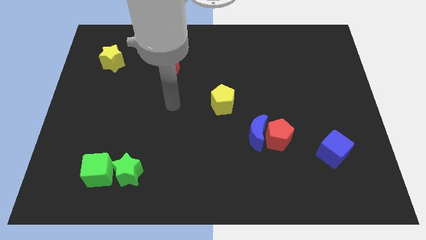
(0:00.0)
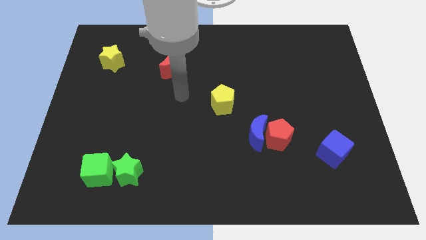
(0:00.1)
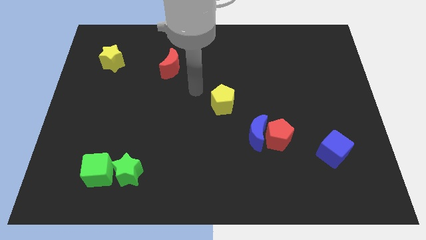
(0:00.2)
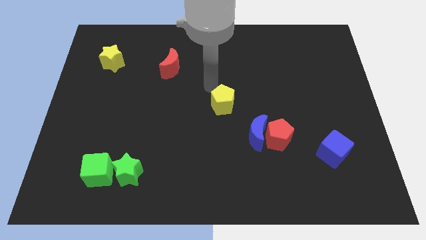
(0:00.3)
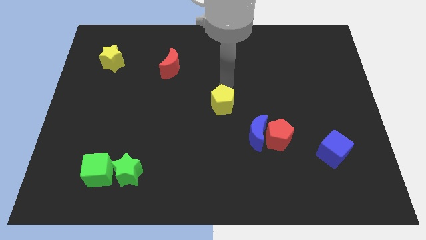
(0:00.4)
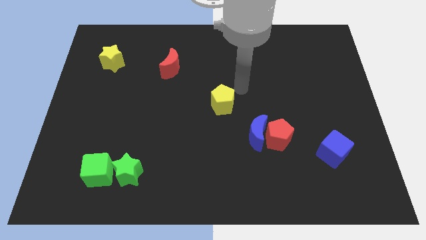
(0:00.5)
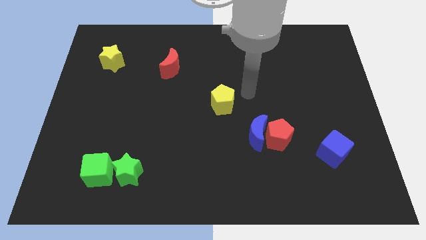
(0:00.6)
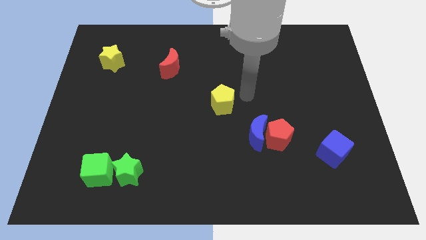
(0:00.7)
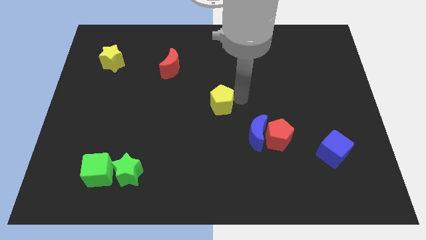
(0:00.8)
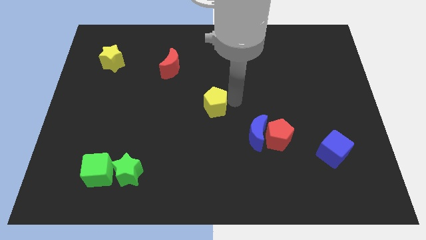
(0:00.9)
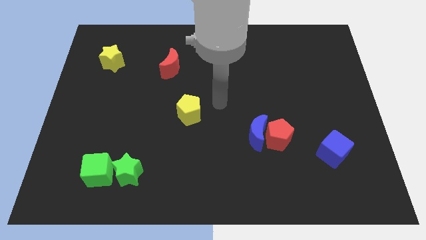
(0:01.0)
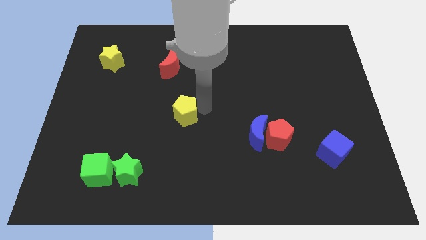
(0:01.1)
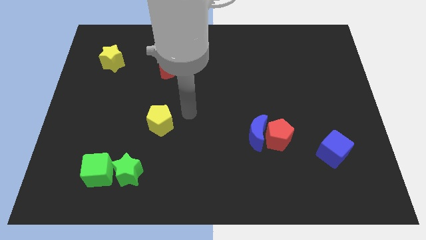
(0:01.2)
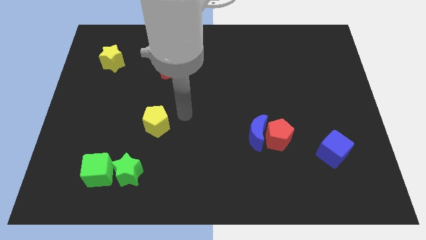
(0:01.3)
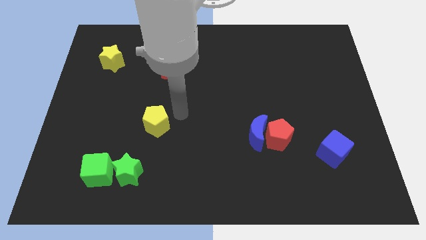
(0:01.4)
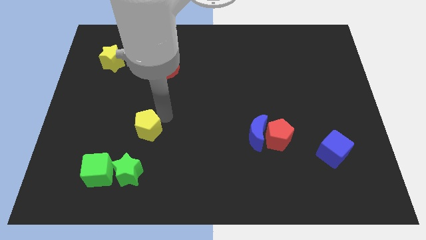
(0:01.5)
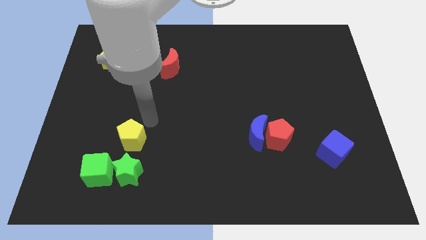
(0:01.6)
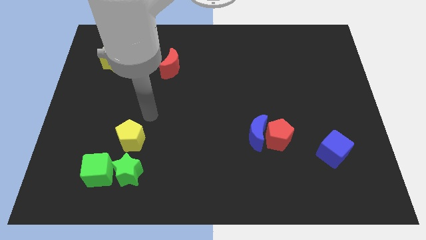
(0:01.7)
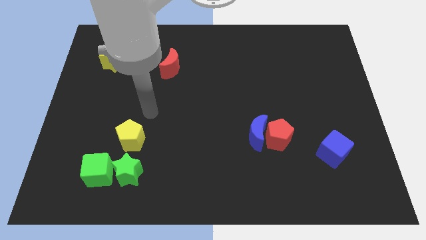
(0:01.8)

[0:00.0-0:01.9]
place the yellow pentagon above the green star

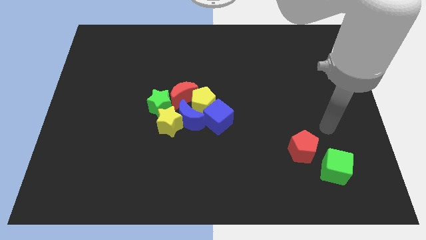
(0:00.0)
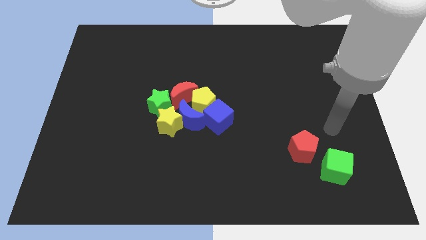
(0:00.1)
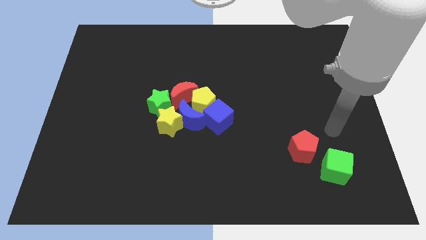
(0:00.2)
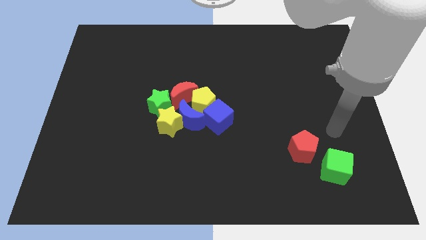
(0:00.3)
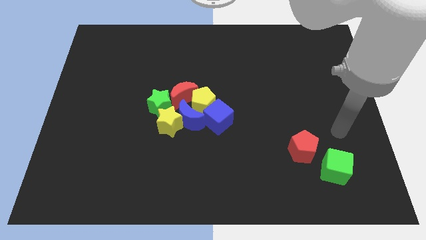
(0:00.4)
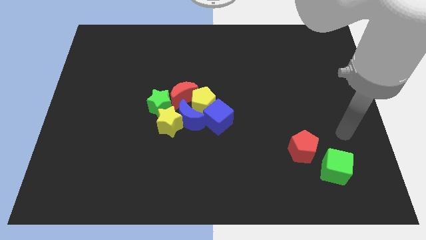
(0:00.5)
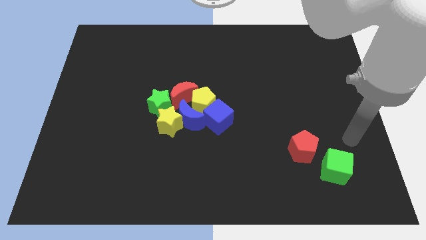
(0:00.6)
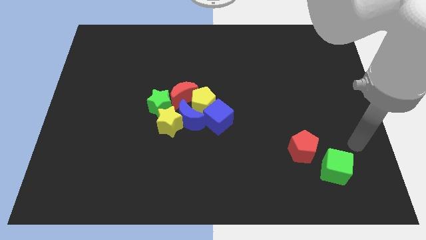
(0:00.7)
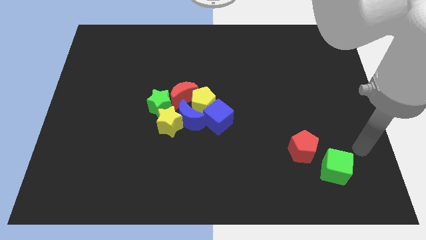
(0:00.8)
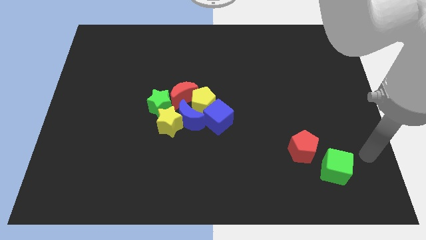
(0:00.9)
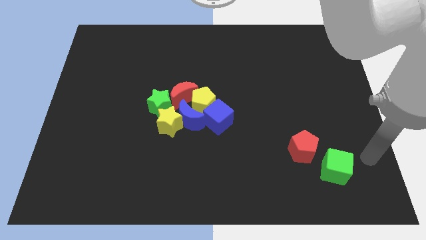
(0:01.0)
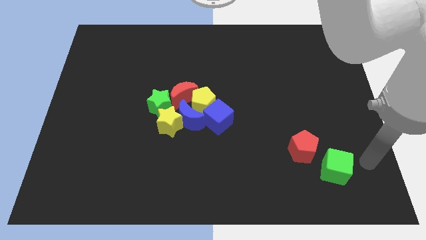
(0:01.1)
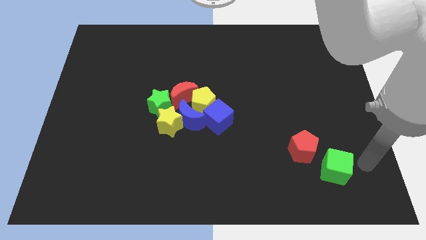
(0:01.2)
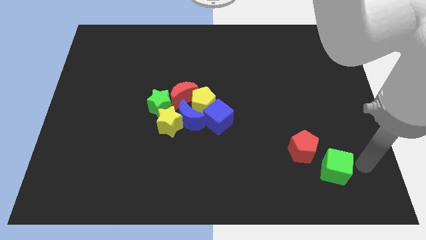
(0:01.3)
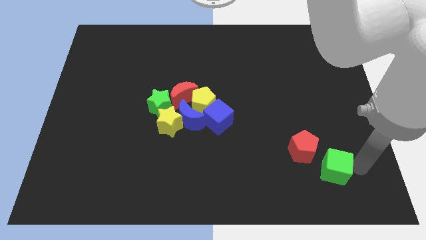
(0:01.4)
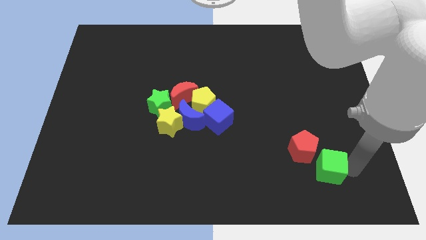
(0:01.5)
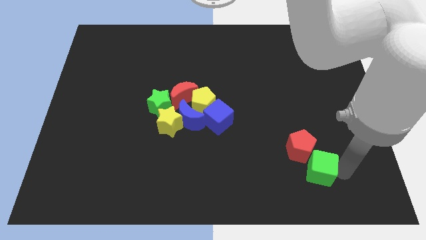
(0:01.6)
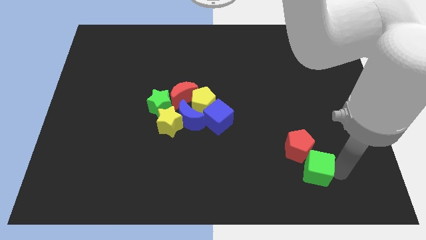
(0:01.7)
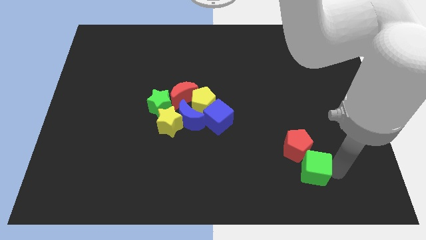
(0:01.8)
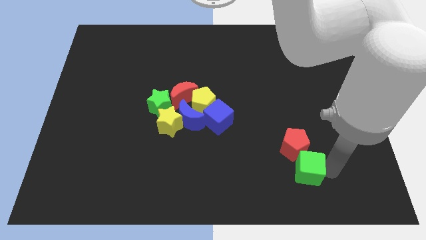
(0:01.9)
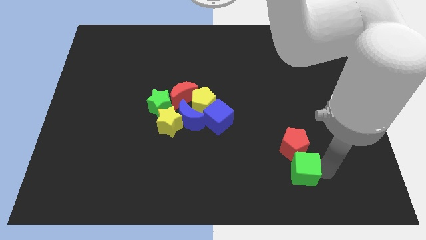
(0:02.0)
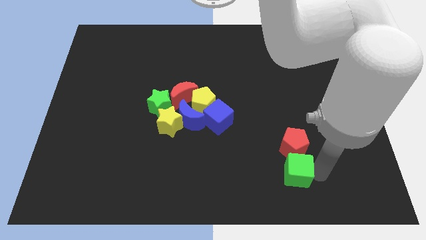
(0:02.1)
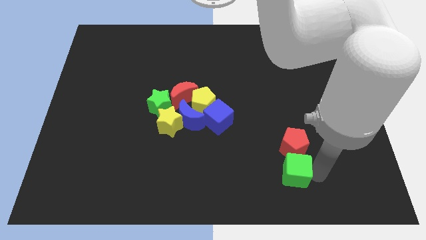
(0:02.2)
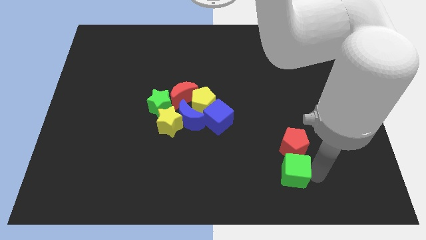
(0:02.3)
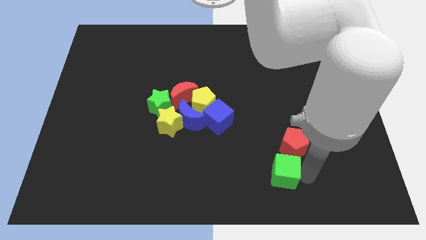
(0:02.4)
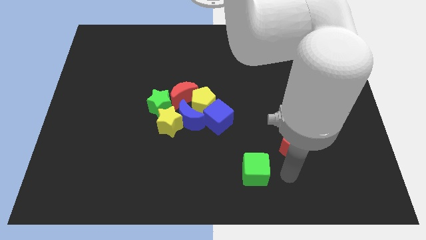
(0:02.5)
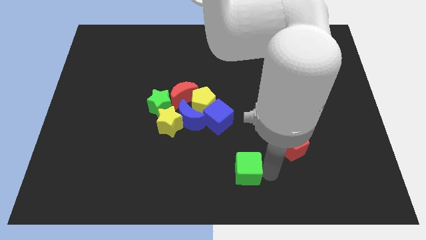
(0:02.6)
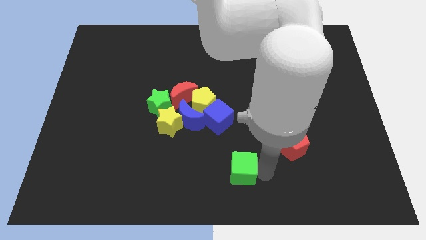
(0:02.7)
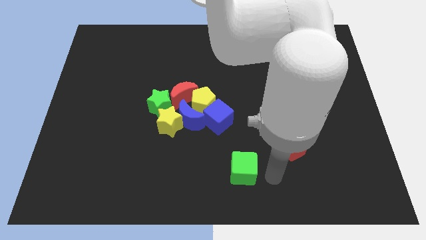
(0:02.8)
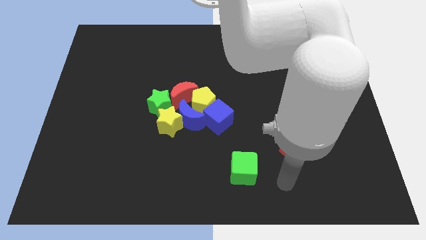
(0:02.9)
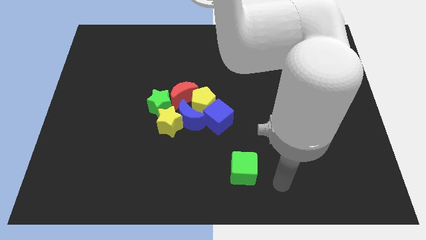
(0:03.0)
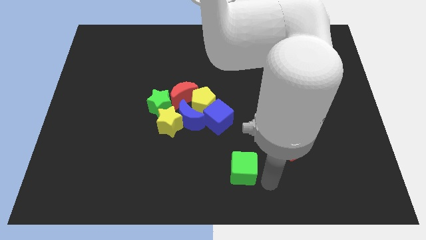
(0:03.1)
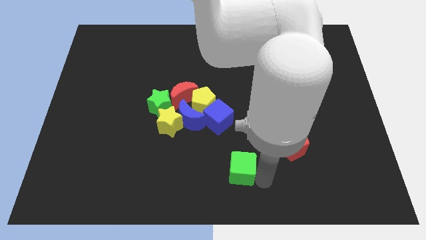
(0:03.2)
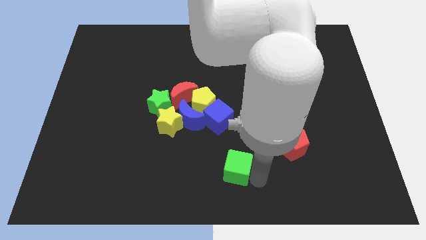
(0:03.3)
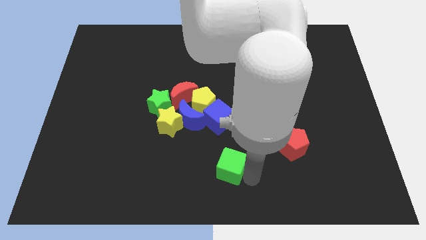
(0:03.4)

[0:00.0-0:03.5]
move the green cube to the left

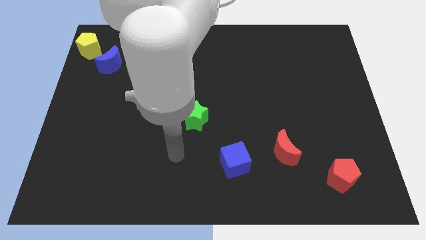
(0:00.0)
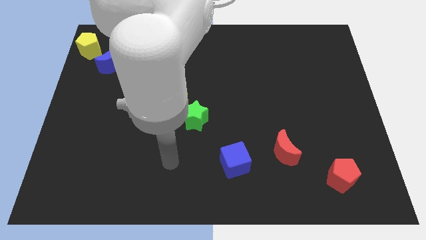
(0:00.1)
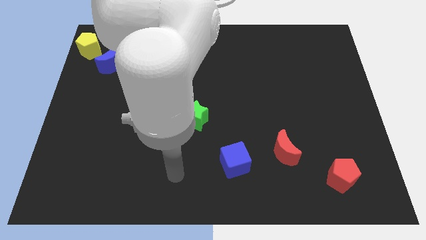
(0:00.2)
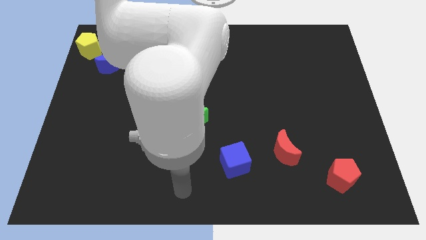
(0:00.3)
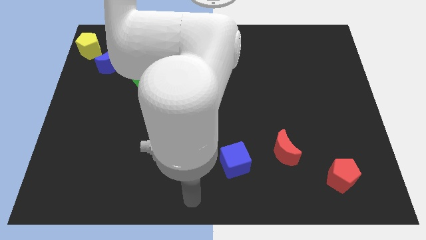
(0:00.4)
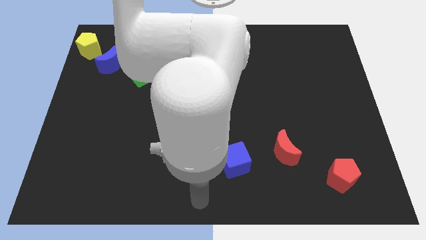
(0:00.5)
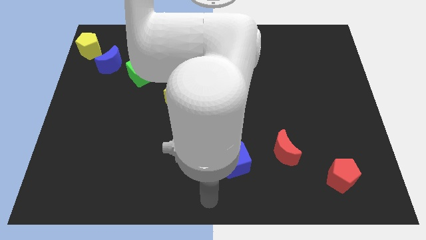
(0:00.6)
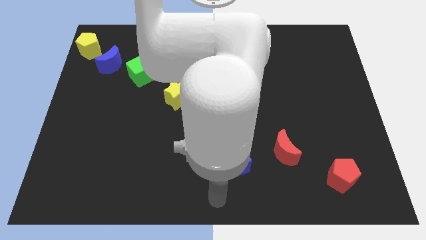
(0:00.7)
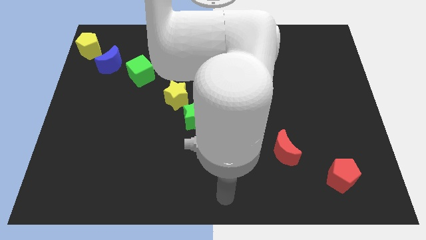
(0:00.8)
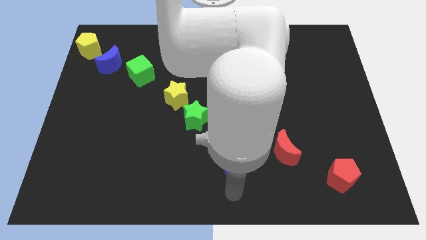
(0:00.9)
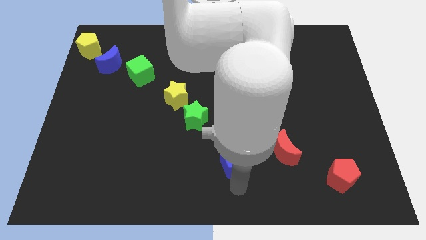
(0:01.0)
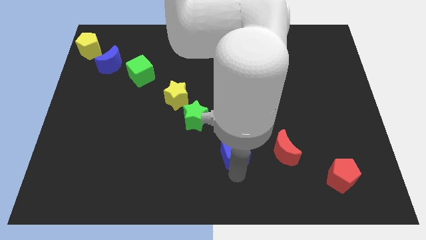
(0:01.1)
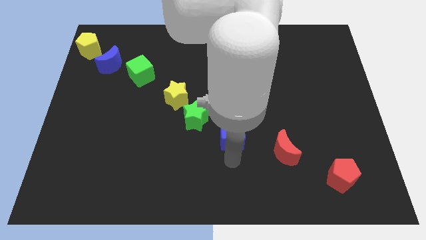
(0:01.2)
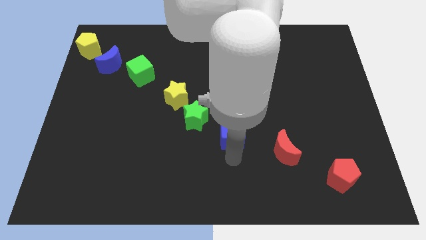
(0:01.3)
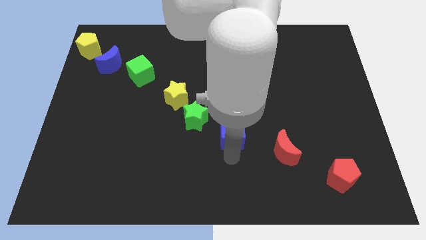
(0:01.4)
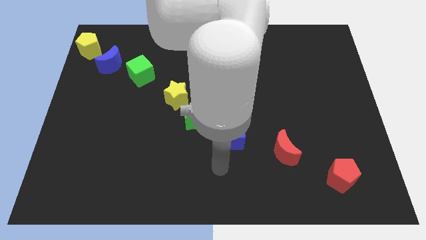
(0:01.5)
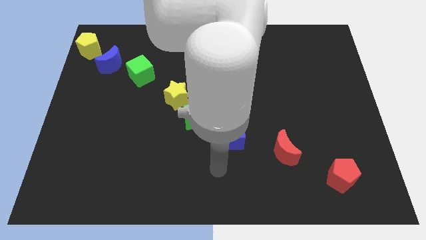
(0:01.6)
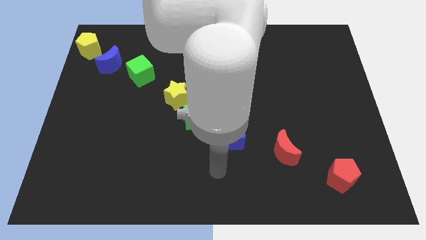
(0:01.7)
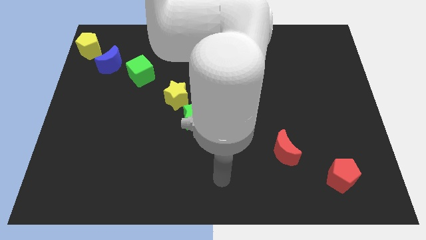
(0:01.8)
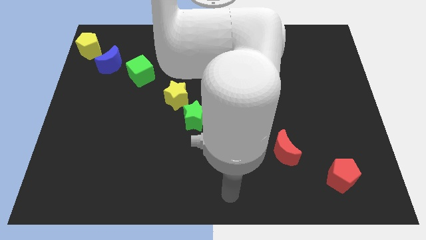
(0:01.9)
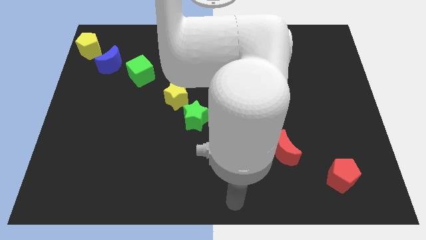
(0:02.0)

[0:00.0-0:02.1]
move the blue cube in between the red crescent and green star

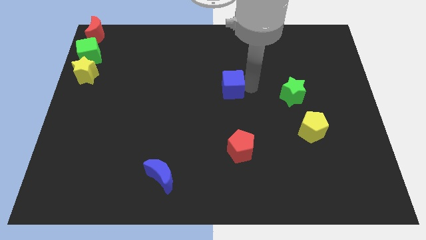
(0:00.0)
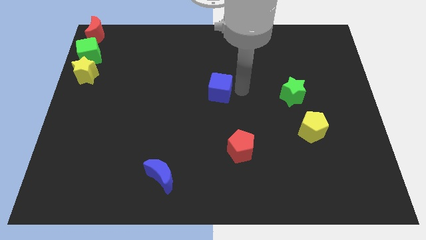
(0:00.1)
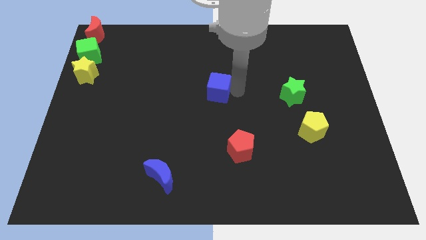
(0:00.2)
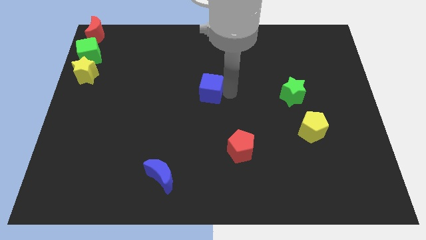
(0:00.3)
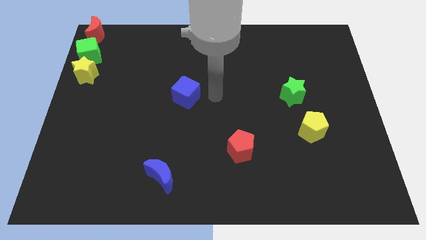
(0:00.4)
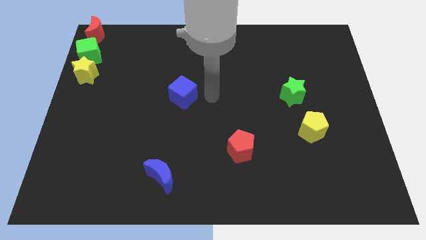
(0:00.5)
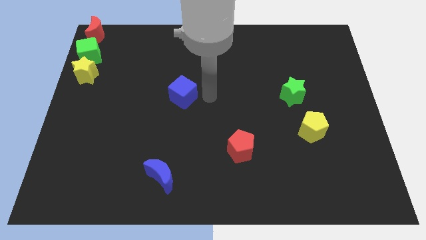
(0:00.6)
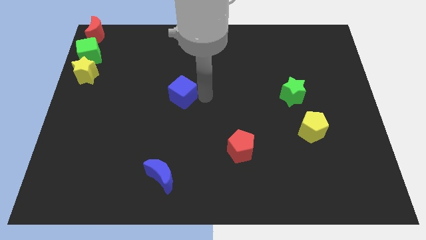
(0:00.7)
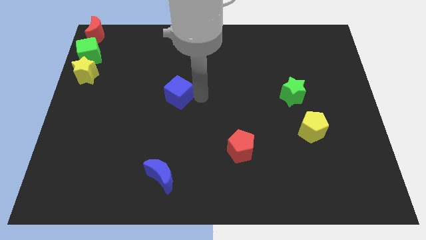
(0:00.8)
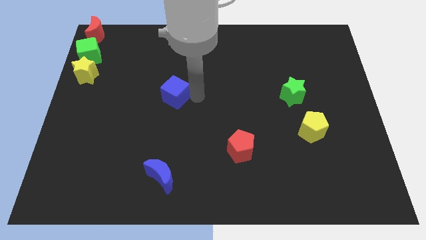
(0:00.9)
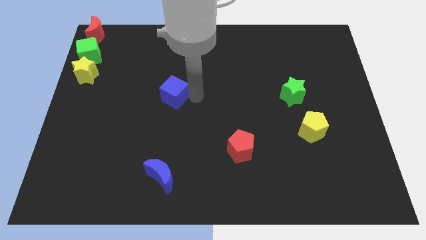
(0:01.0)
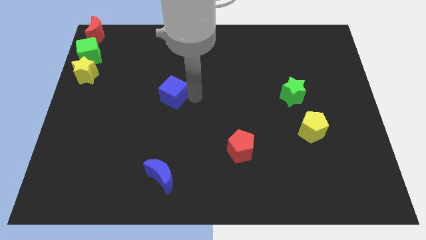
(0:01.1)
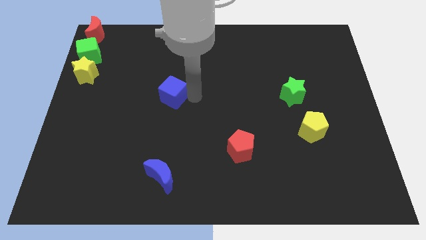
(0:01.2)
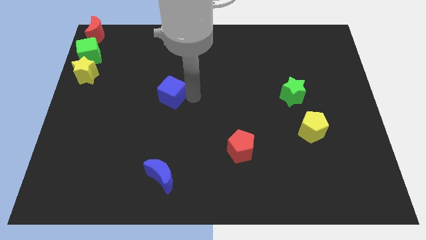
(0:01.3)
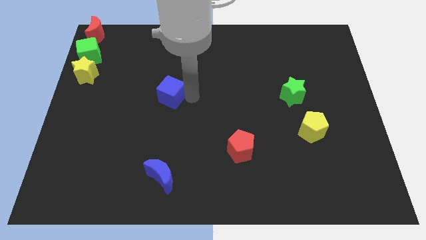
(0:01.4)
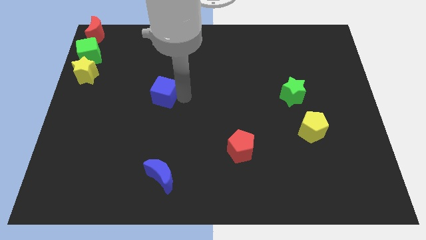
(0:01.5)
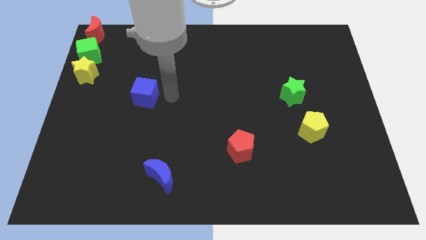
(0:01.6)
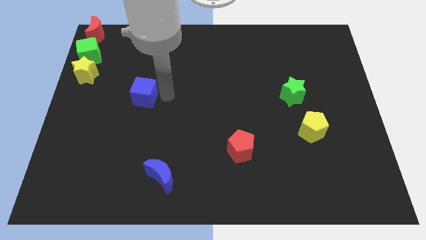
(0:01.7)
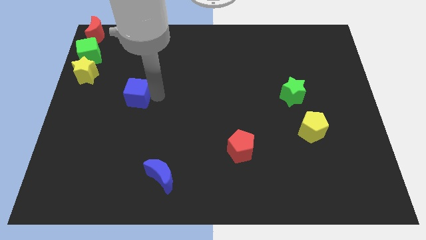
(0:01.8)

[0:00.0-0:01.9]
drag the blue cube slightly to the left
